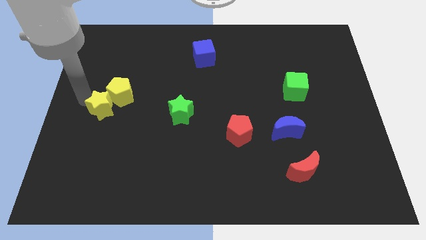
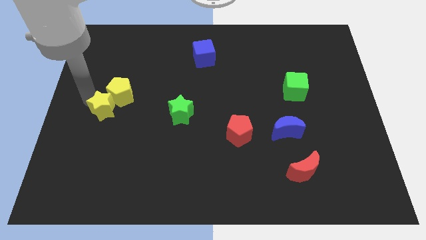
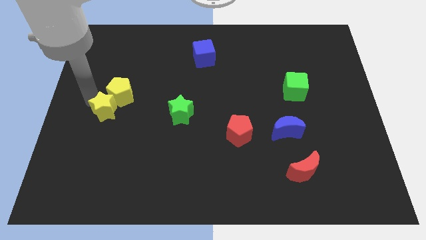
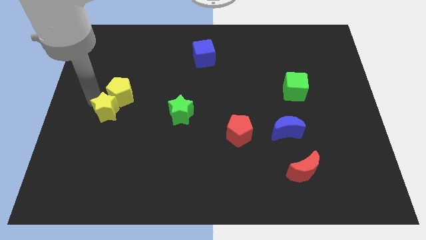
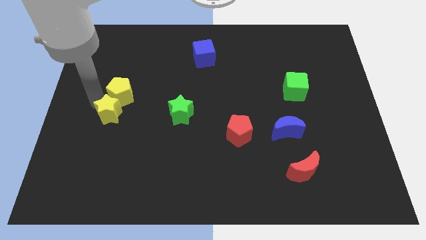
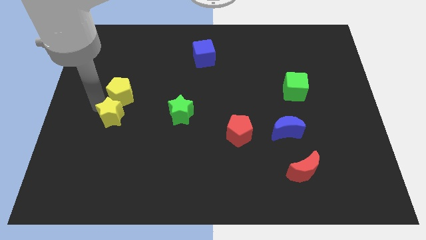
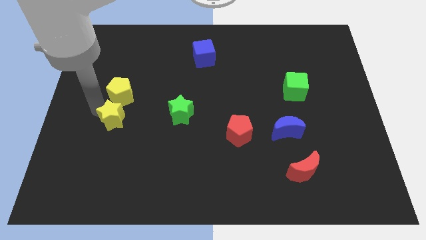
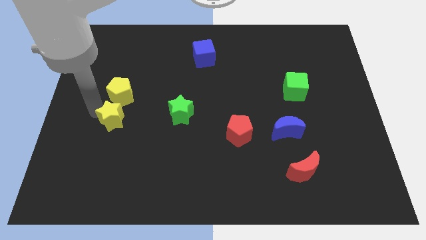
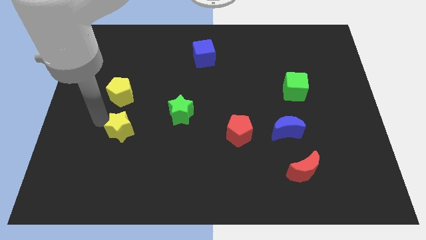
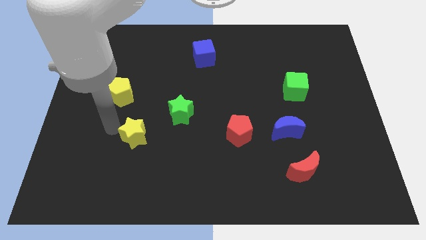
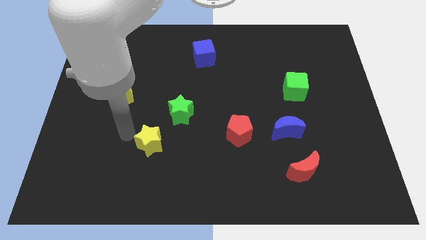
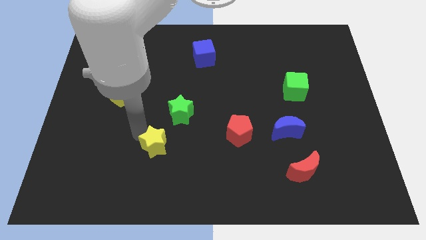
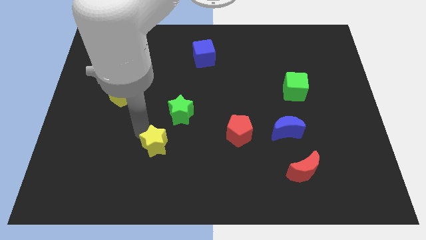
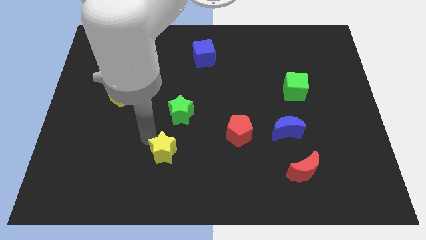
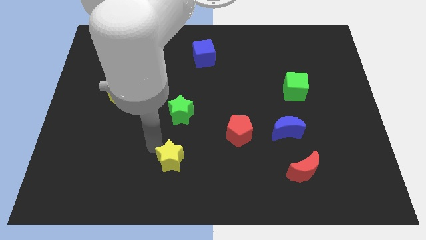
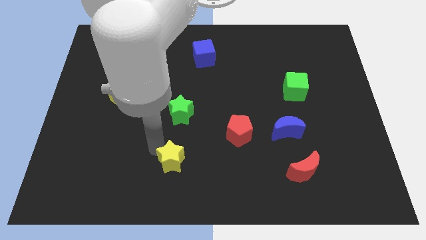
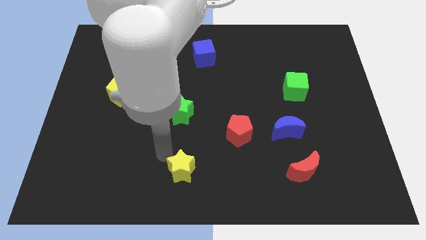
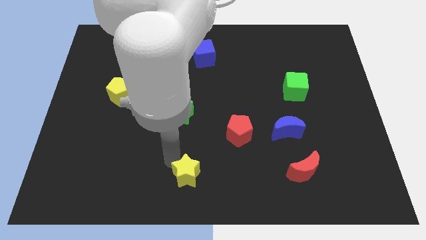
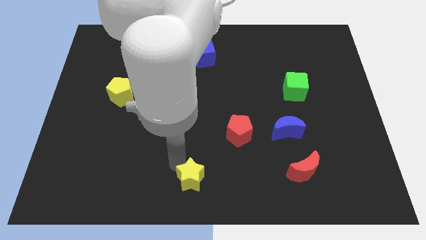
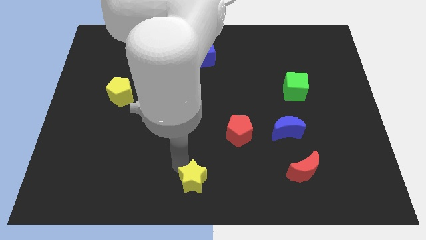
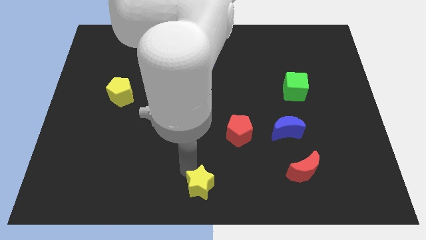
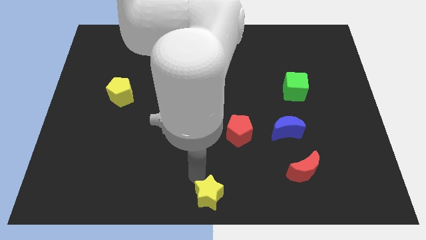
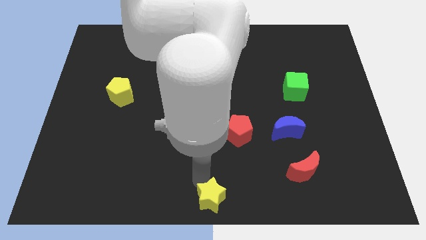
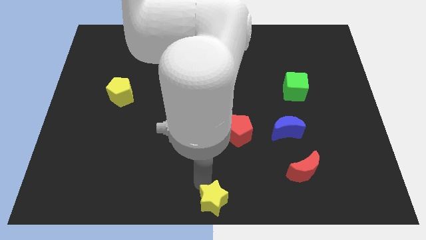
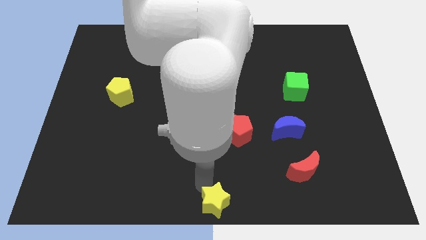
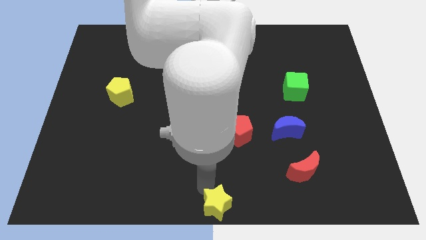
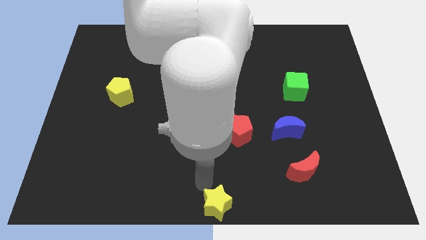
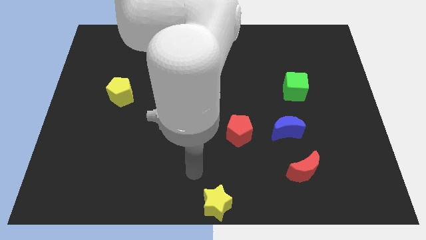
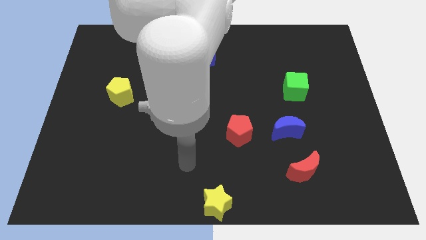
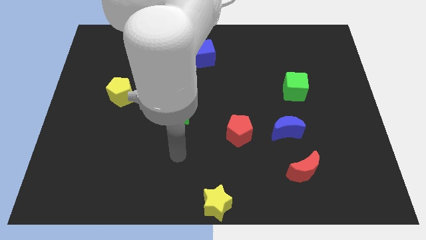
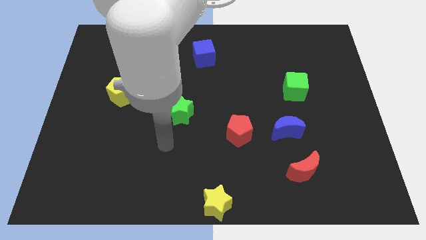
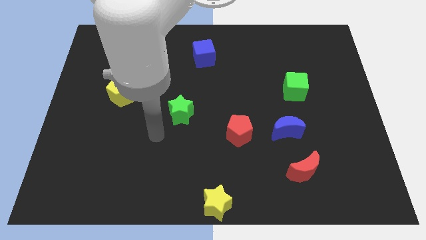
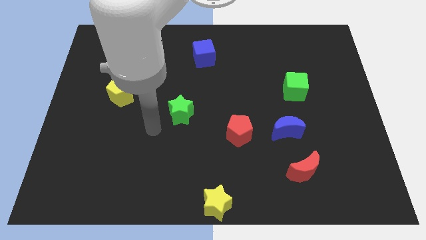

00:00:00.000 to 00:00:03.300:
move the yellow star to the bottom center

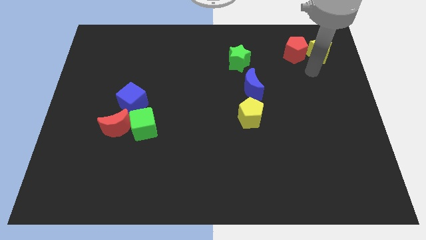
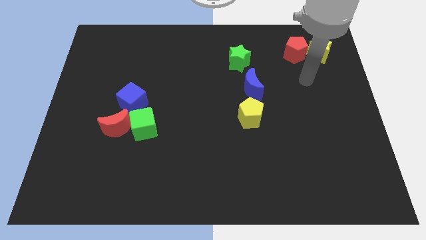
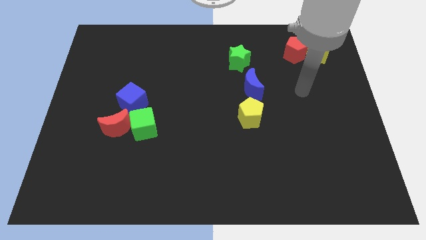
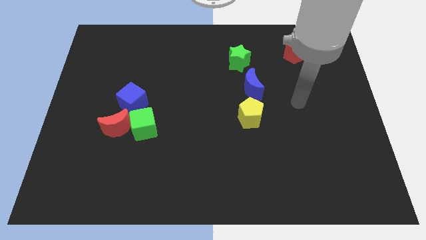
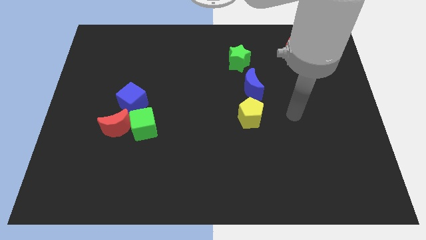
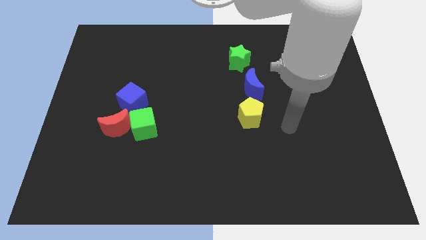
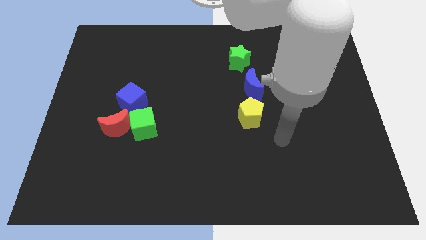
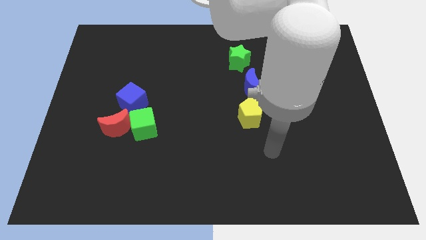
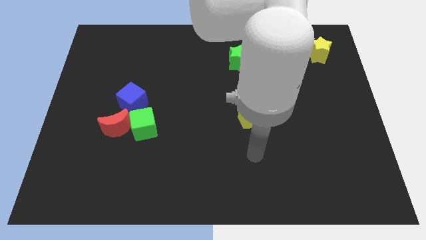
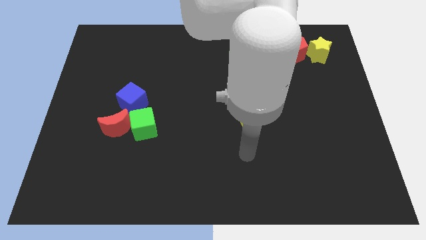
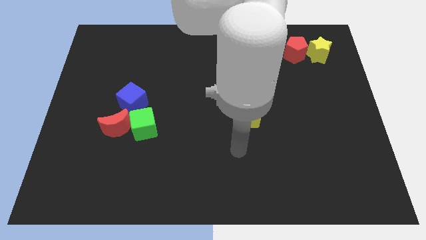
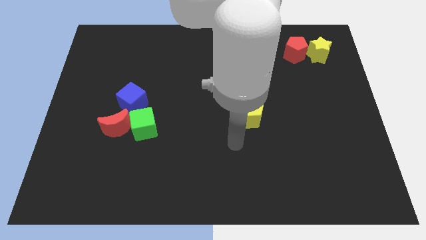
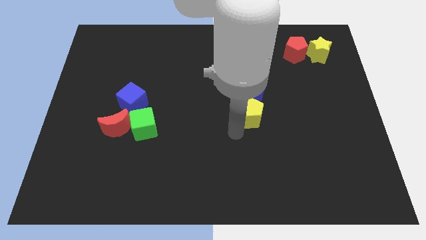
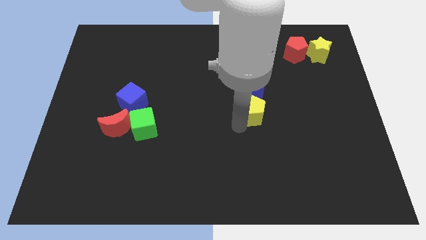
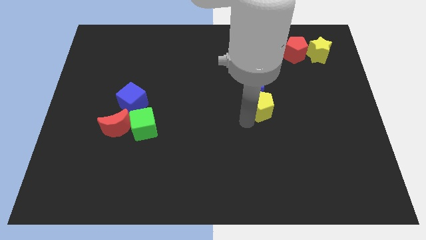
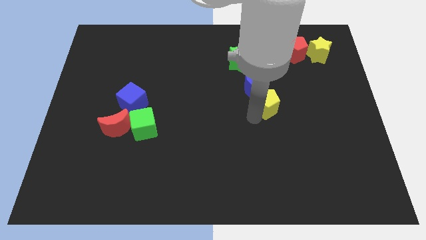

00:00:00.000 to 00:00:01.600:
move the yellow pentagon towards the blue crescent

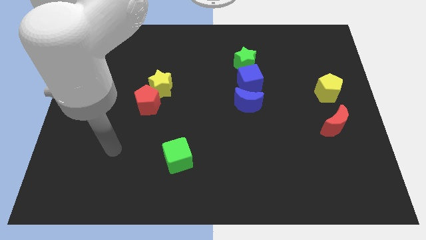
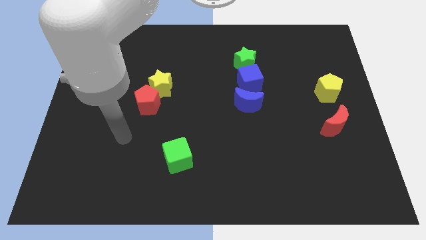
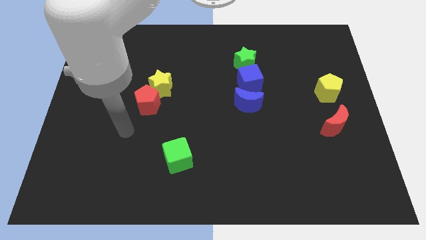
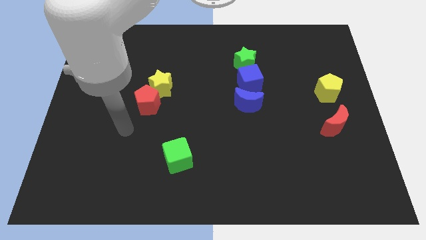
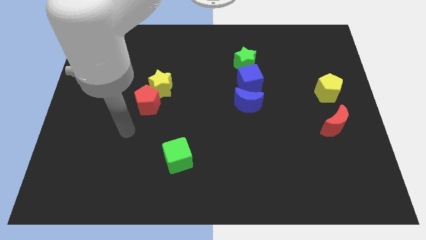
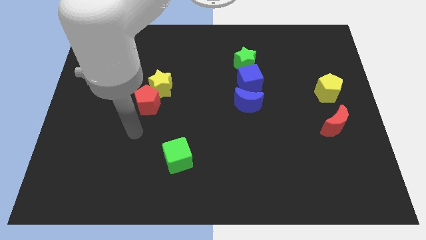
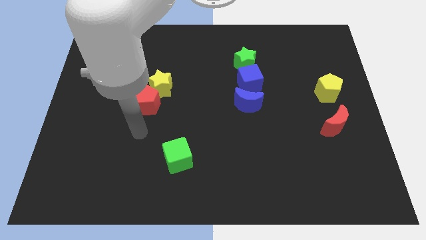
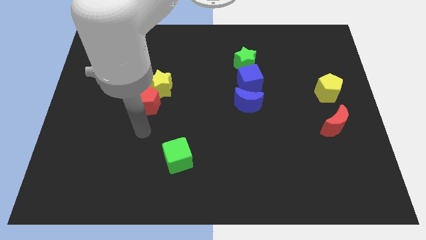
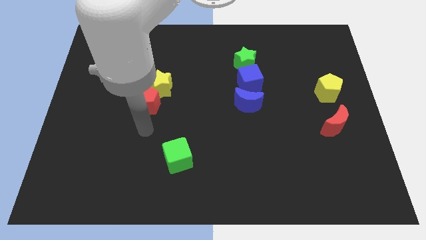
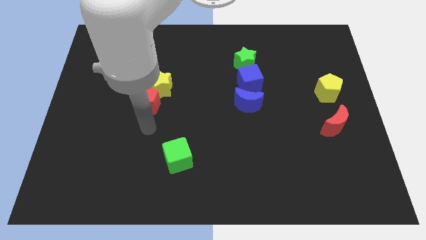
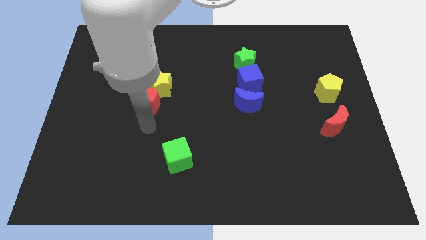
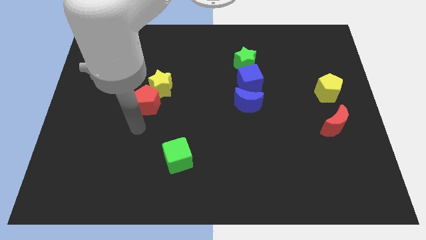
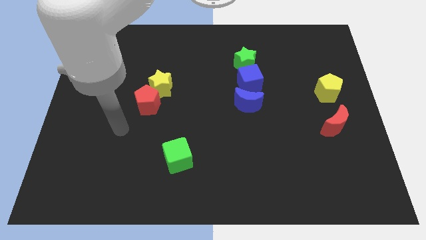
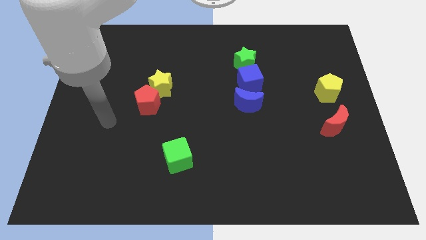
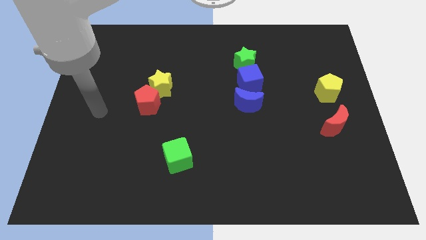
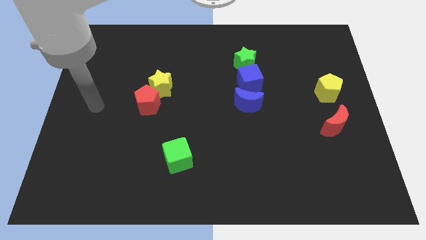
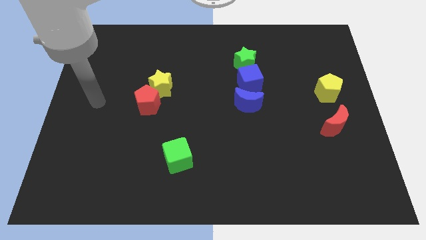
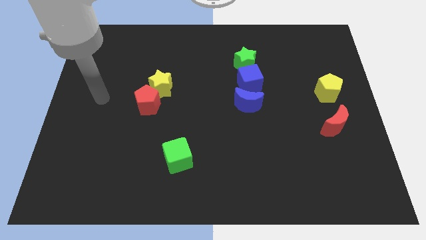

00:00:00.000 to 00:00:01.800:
place your hand to the left of the red pentagon

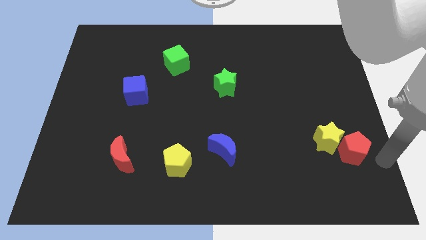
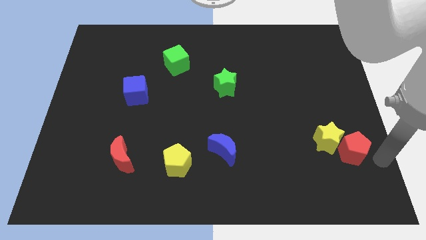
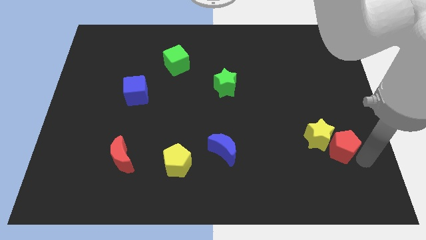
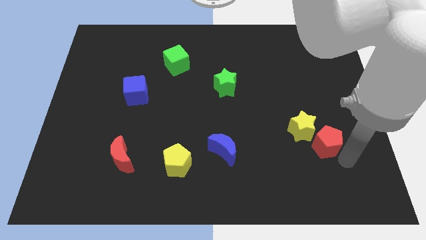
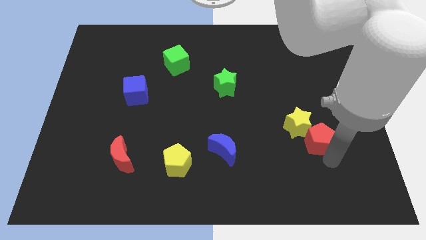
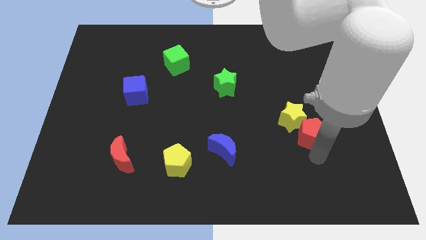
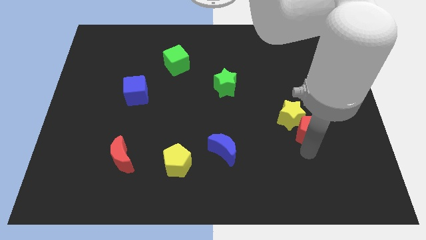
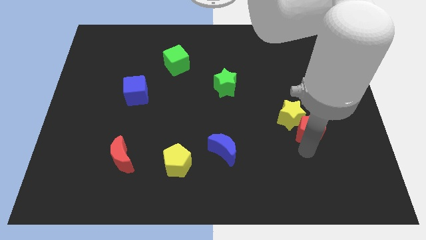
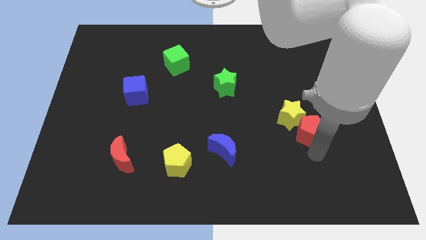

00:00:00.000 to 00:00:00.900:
move the red pentagon and yellow star to the diagonally left side

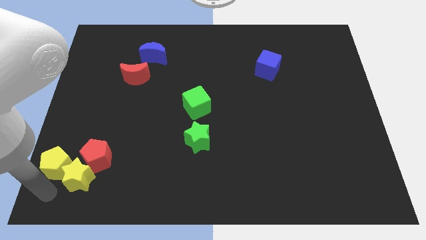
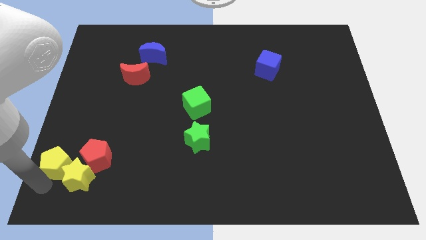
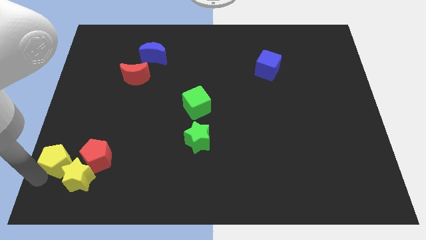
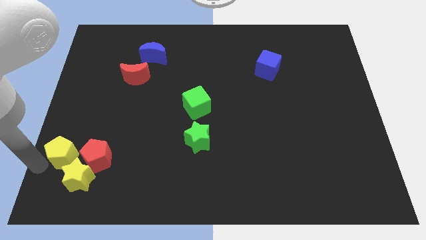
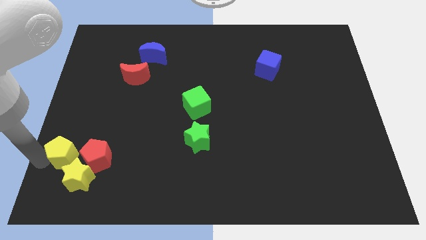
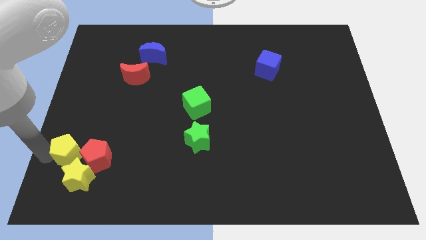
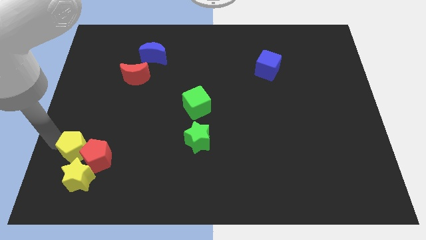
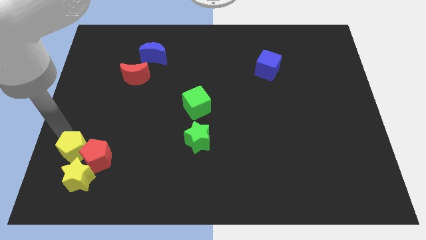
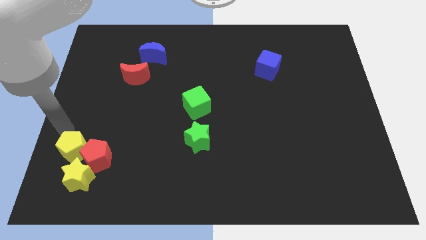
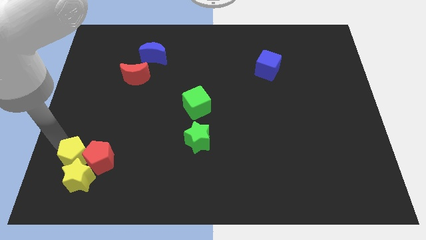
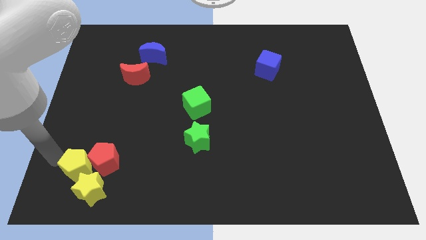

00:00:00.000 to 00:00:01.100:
push the yellow pentagon into the red pentagon

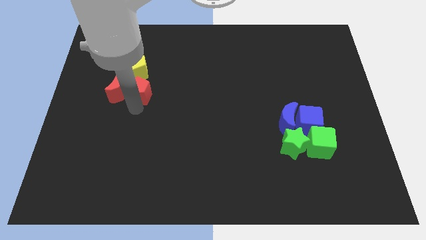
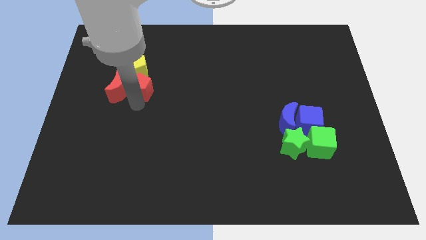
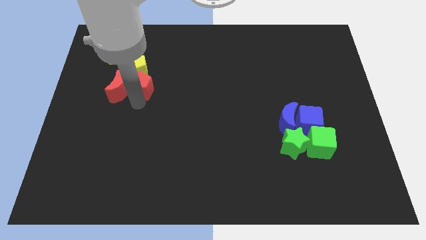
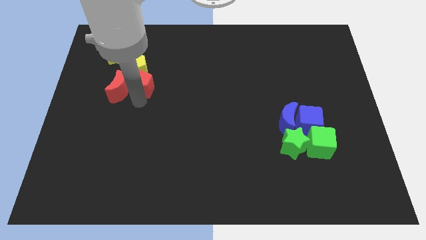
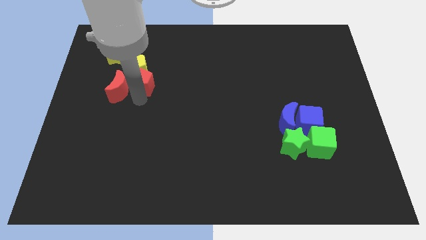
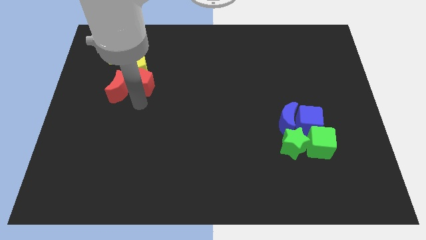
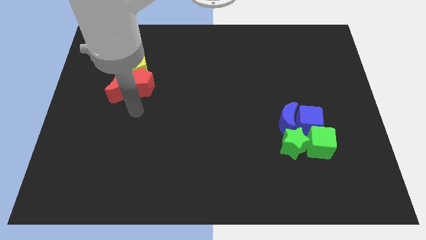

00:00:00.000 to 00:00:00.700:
push the red pentagon close to the yellow pentagon
